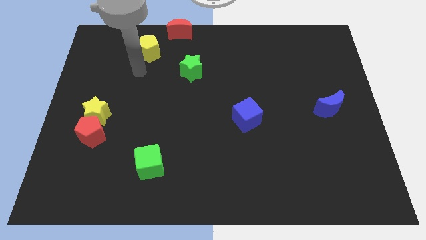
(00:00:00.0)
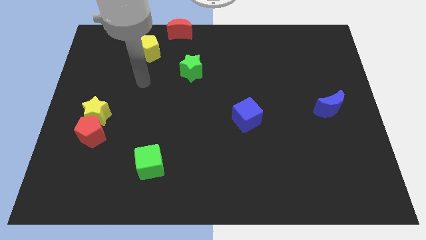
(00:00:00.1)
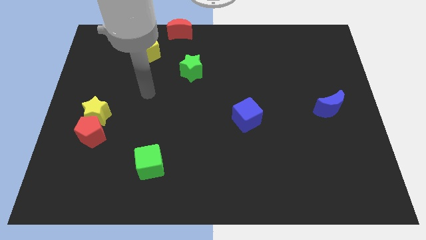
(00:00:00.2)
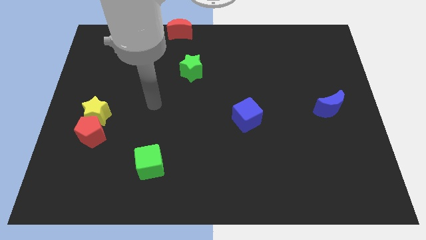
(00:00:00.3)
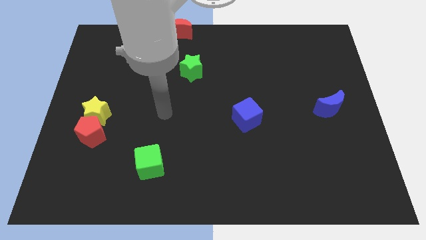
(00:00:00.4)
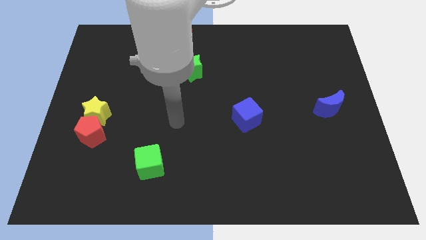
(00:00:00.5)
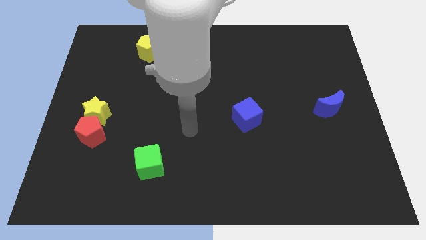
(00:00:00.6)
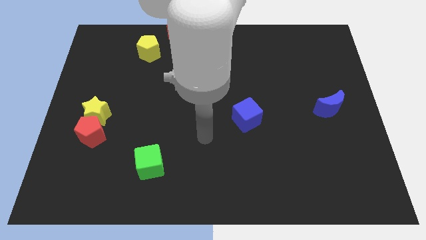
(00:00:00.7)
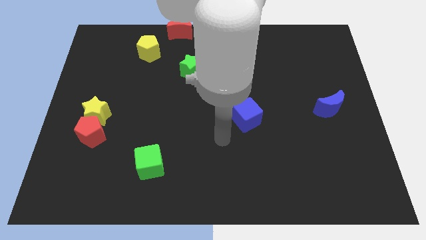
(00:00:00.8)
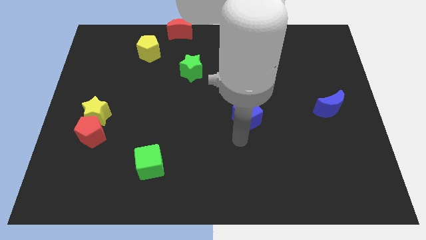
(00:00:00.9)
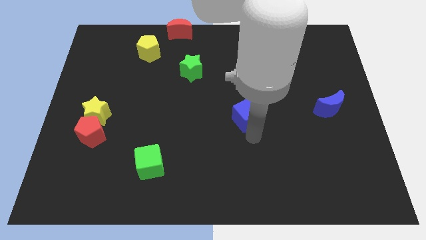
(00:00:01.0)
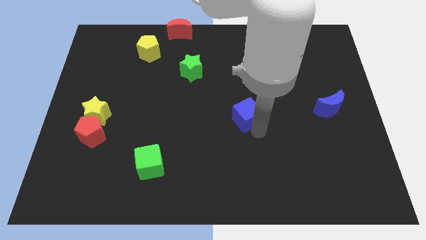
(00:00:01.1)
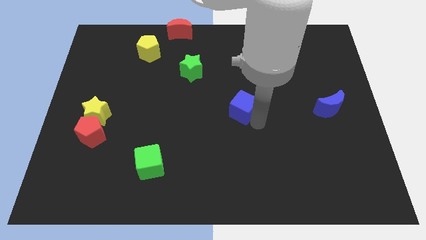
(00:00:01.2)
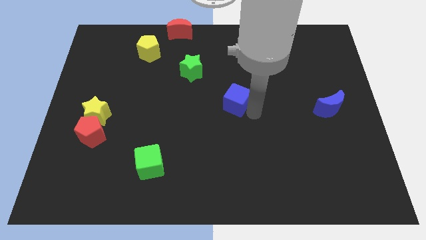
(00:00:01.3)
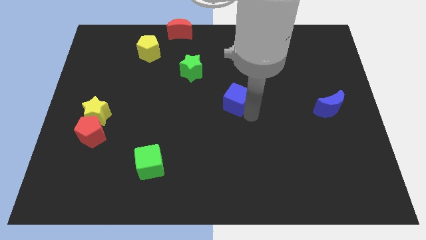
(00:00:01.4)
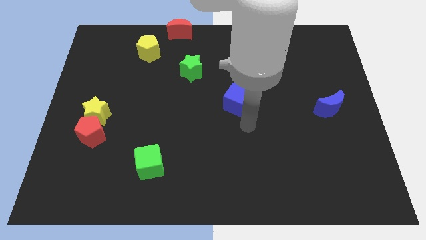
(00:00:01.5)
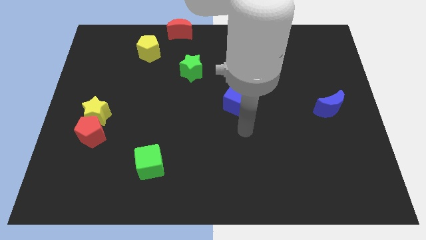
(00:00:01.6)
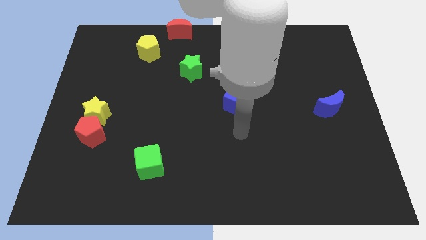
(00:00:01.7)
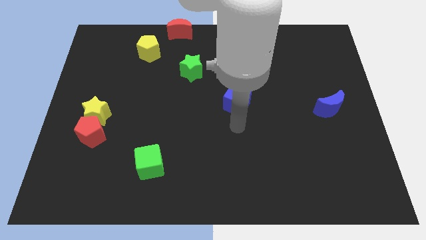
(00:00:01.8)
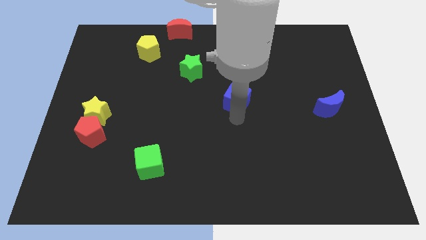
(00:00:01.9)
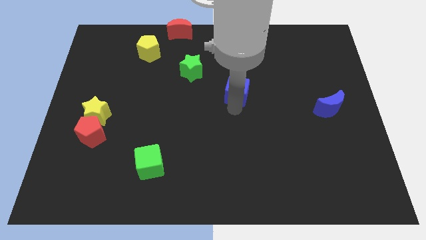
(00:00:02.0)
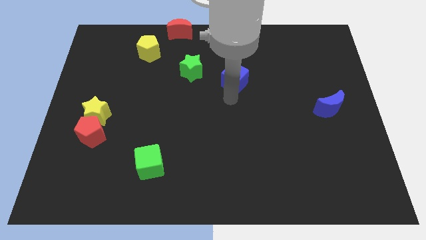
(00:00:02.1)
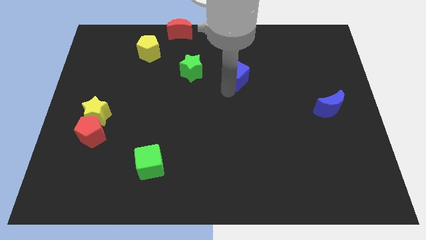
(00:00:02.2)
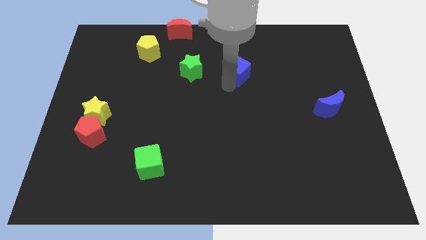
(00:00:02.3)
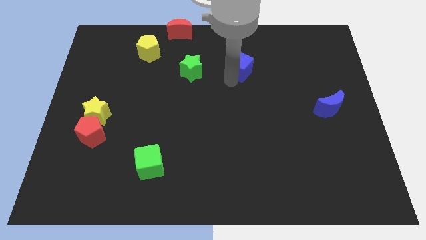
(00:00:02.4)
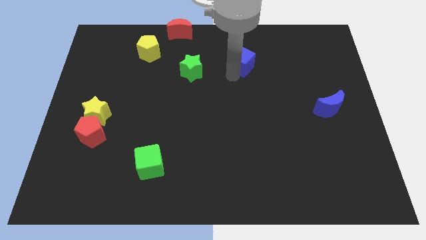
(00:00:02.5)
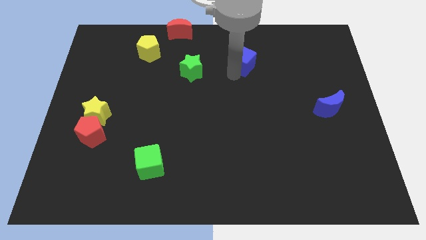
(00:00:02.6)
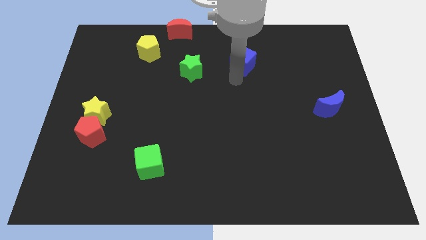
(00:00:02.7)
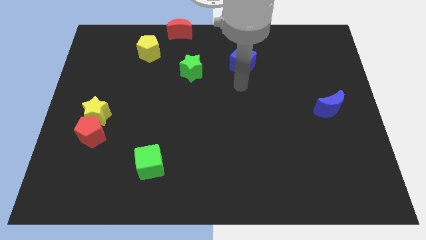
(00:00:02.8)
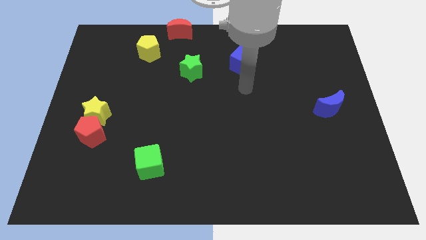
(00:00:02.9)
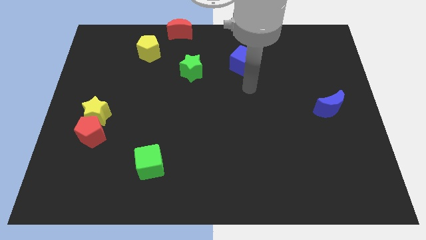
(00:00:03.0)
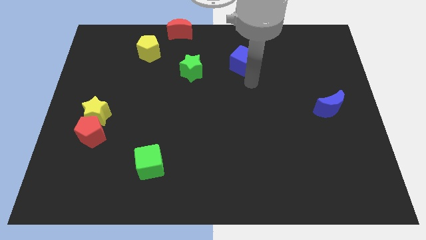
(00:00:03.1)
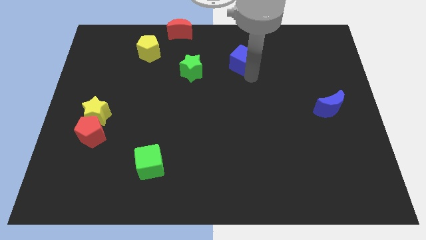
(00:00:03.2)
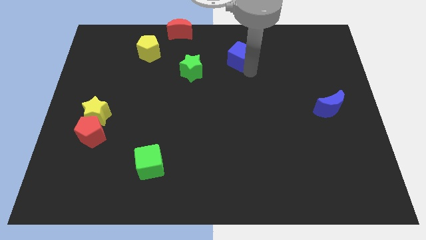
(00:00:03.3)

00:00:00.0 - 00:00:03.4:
move the blue cube right to the green star

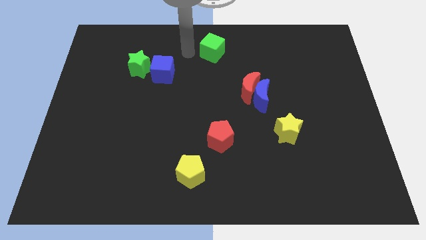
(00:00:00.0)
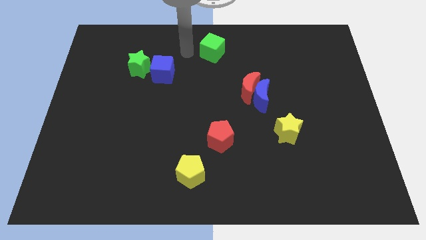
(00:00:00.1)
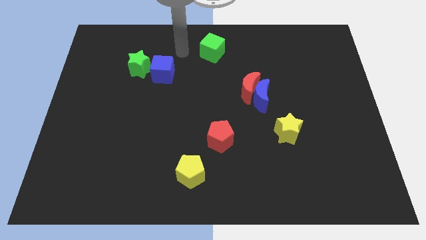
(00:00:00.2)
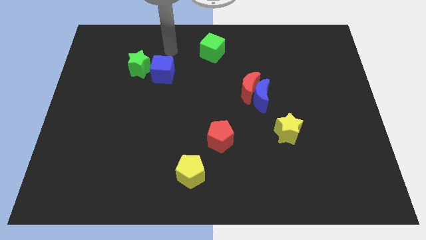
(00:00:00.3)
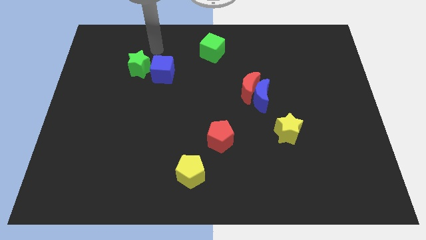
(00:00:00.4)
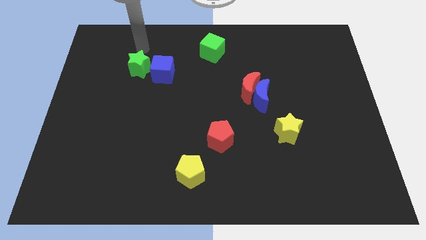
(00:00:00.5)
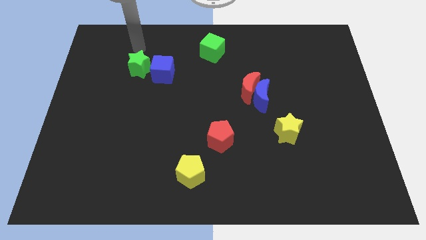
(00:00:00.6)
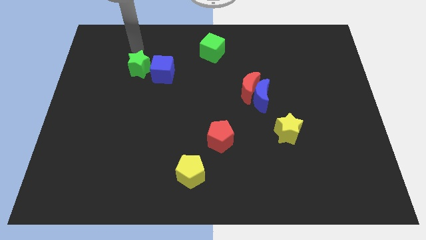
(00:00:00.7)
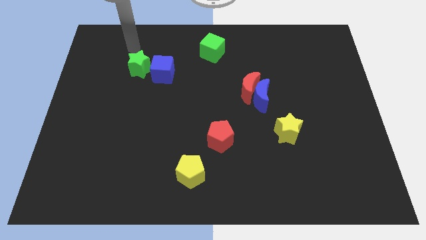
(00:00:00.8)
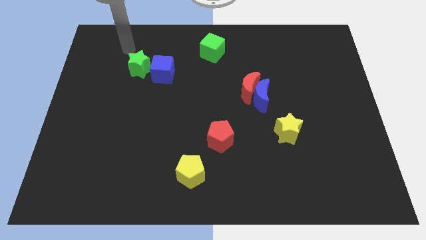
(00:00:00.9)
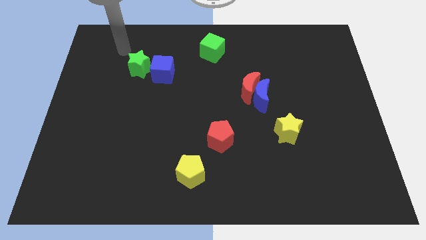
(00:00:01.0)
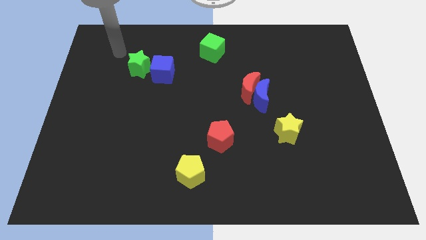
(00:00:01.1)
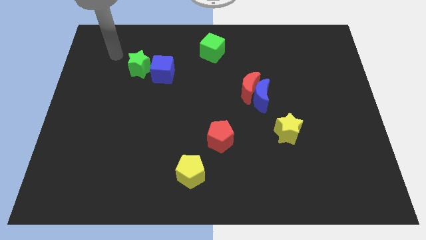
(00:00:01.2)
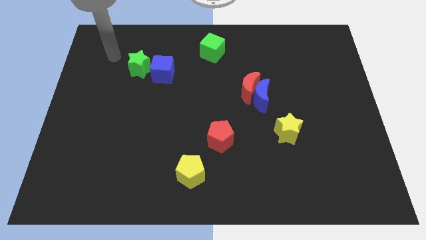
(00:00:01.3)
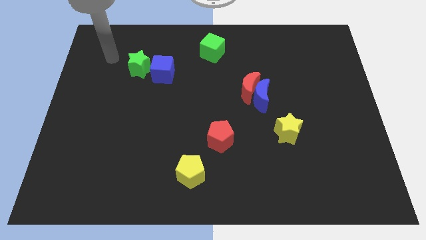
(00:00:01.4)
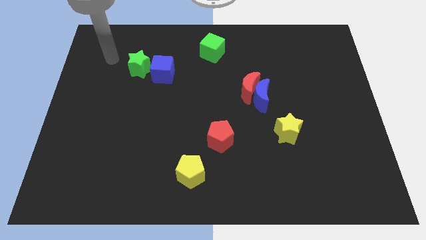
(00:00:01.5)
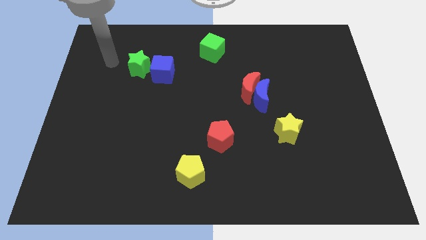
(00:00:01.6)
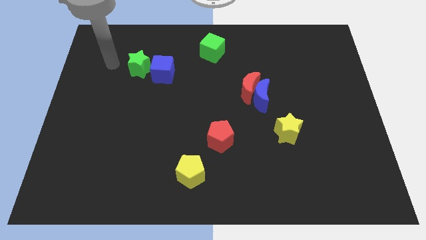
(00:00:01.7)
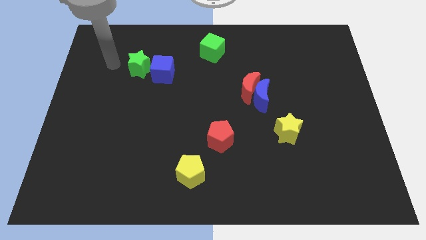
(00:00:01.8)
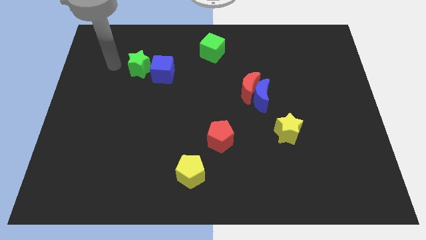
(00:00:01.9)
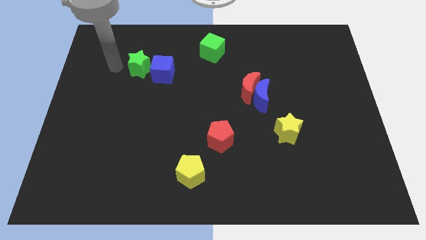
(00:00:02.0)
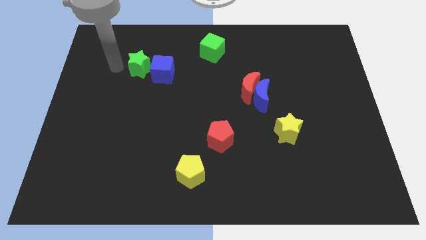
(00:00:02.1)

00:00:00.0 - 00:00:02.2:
move your arm to the right of green star

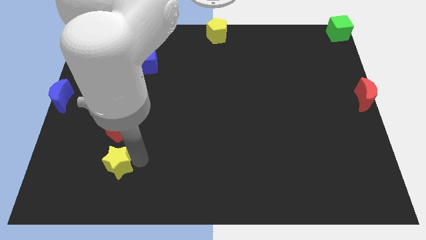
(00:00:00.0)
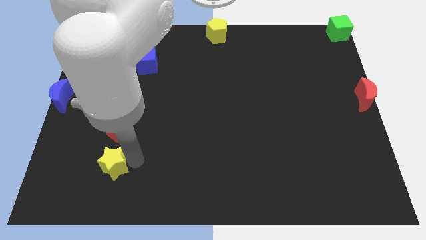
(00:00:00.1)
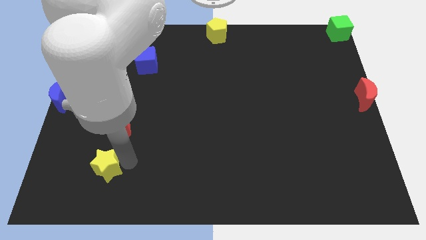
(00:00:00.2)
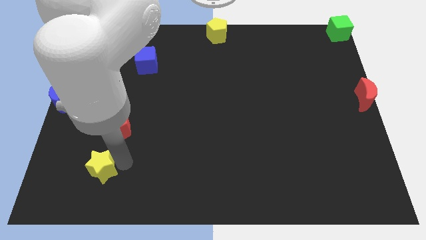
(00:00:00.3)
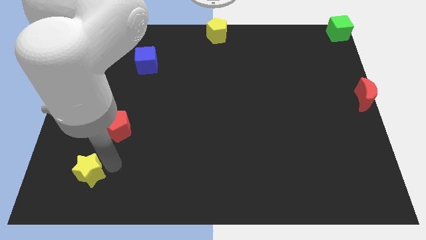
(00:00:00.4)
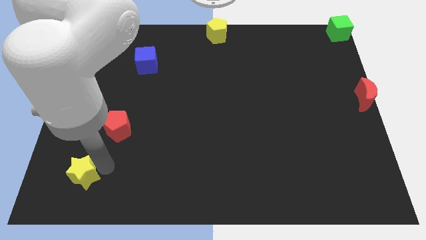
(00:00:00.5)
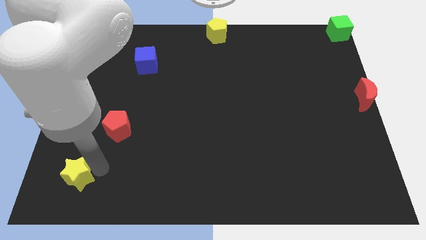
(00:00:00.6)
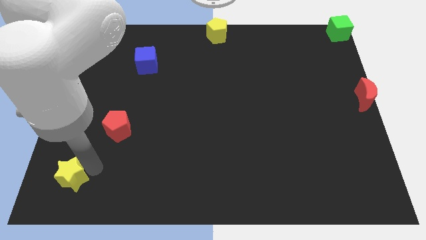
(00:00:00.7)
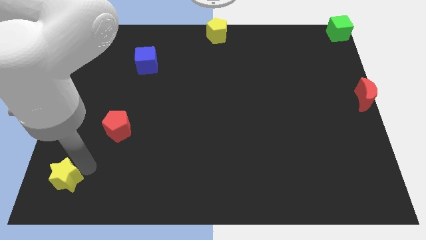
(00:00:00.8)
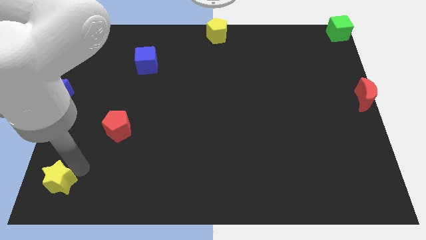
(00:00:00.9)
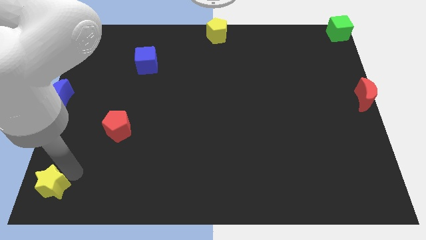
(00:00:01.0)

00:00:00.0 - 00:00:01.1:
push the yellow star to the bottom left corner of the board

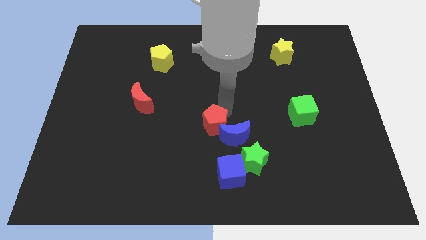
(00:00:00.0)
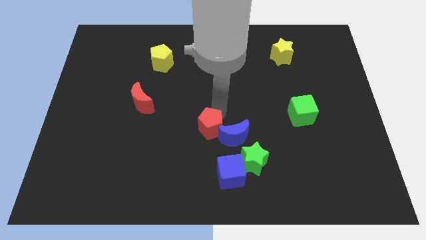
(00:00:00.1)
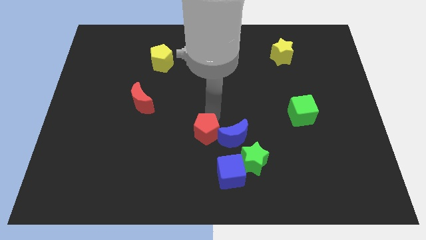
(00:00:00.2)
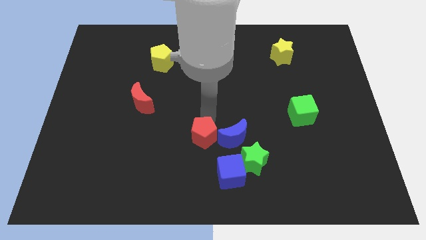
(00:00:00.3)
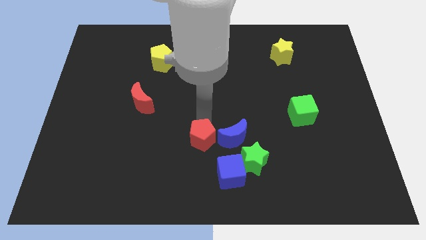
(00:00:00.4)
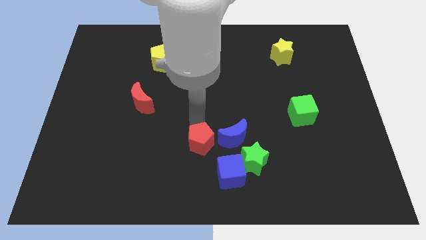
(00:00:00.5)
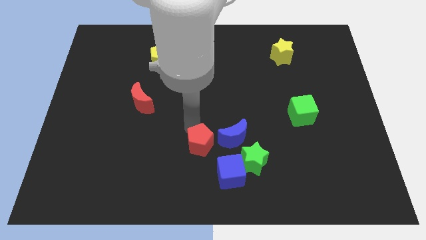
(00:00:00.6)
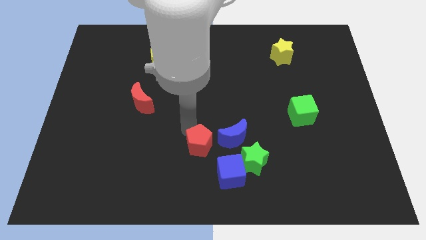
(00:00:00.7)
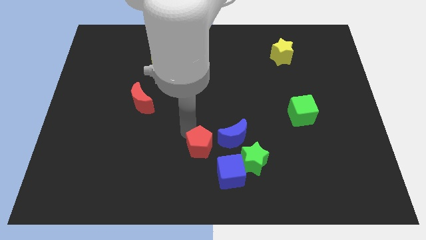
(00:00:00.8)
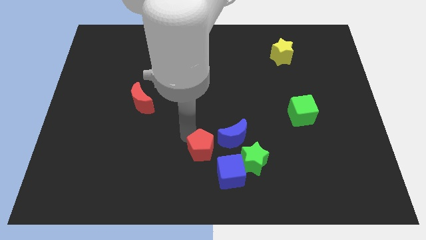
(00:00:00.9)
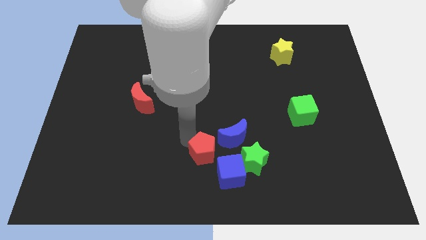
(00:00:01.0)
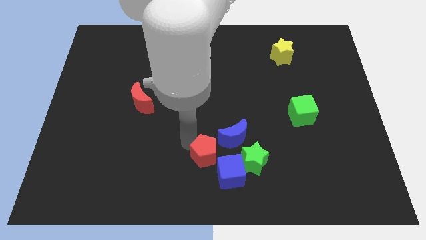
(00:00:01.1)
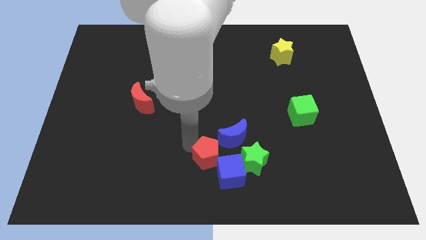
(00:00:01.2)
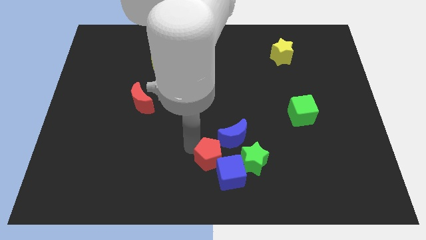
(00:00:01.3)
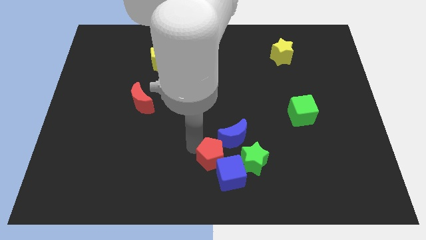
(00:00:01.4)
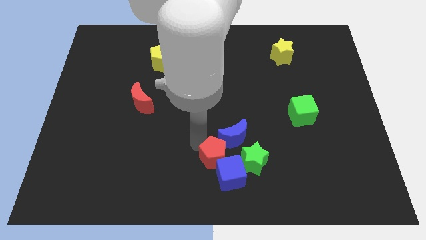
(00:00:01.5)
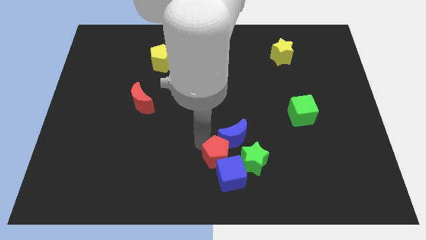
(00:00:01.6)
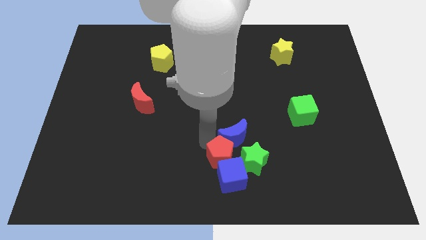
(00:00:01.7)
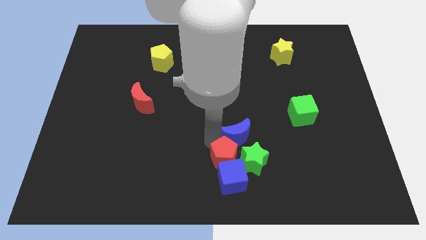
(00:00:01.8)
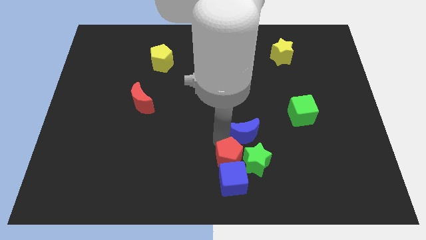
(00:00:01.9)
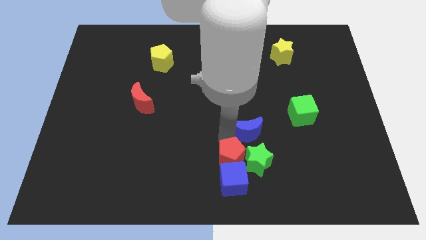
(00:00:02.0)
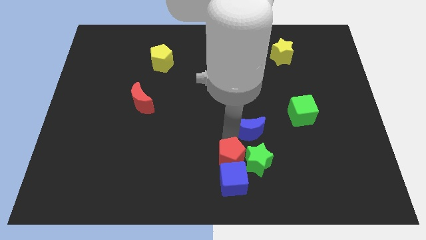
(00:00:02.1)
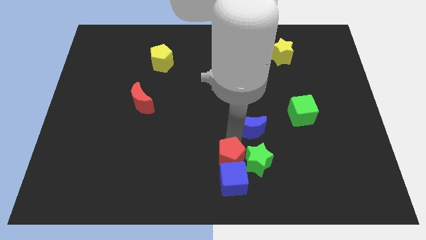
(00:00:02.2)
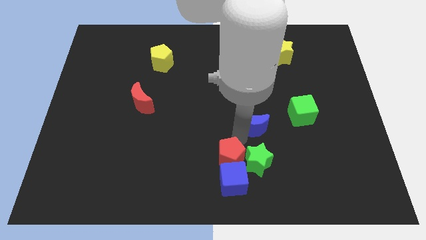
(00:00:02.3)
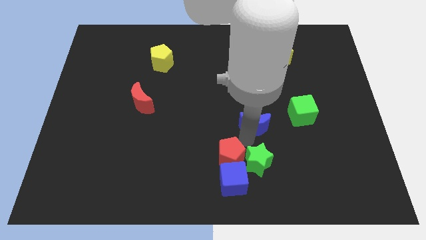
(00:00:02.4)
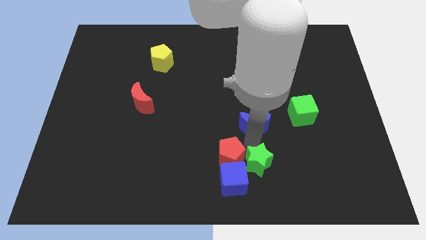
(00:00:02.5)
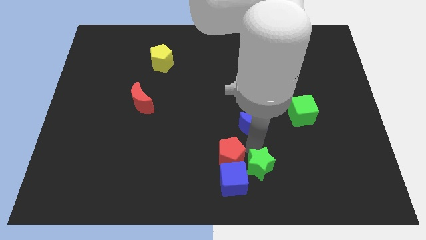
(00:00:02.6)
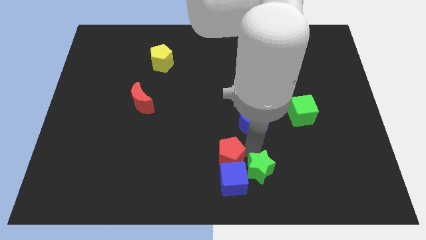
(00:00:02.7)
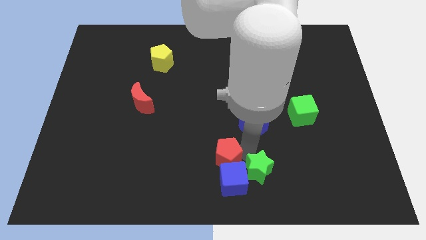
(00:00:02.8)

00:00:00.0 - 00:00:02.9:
move the red pentagon left side of the green star
